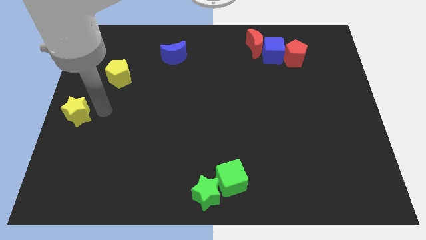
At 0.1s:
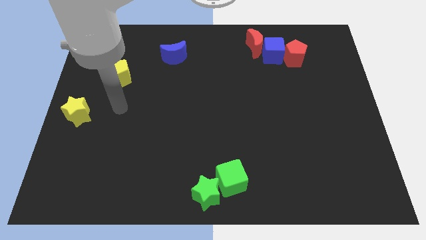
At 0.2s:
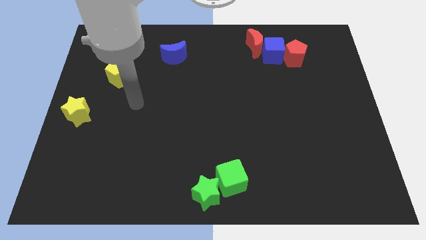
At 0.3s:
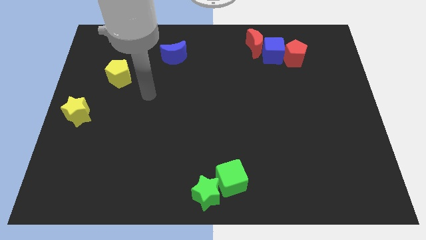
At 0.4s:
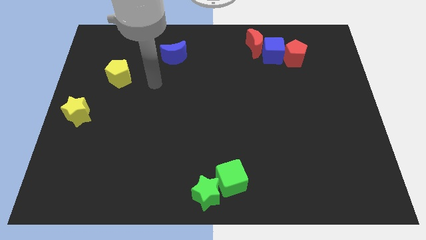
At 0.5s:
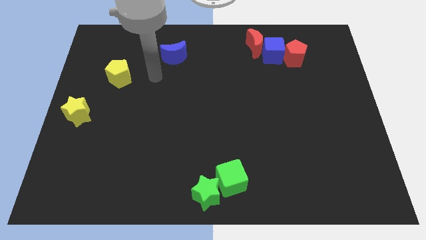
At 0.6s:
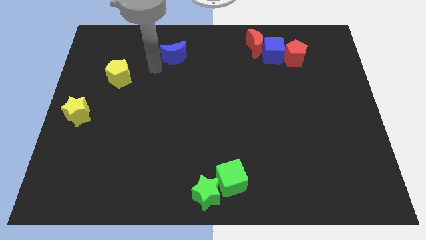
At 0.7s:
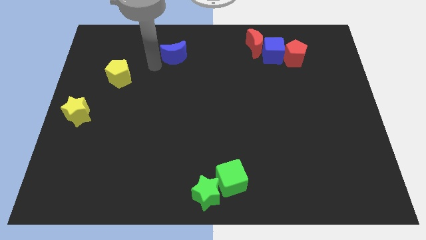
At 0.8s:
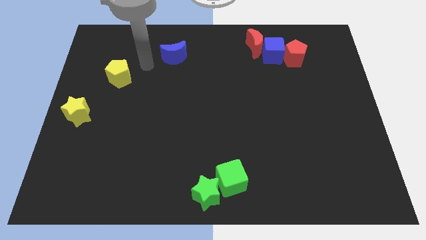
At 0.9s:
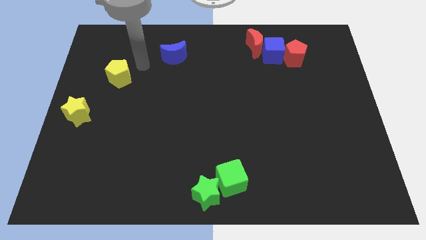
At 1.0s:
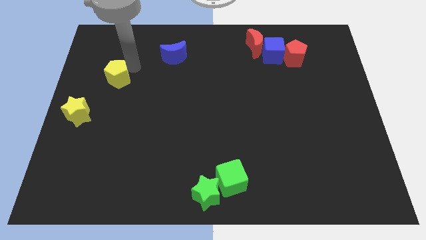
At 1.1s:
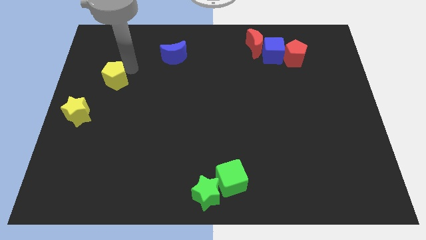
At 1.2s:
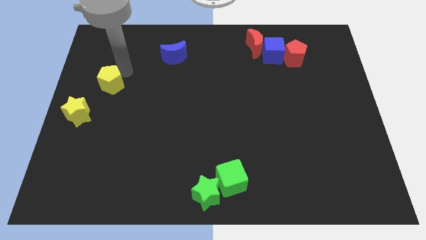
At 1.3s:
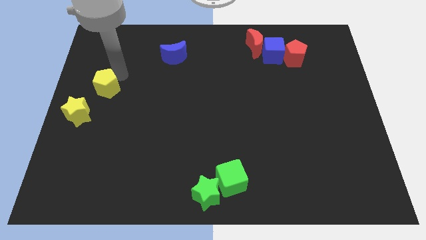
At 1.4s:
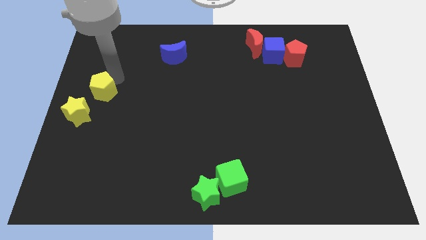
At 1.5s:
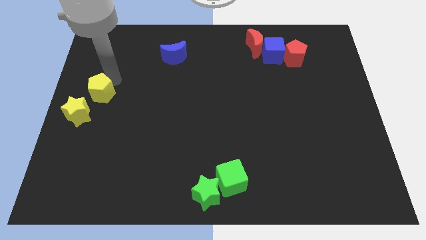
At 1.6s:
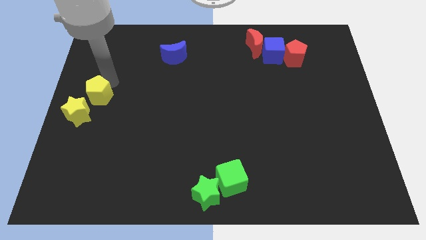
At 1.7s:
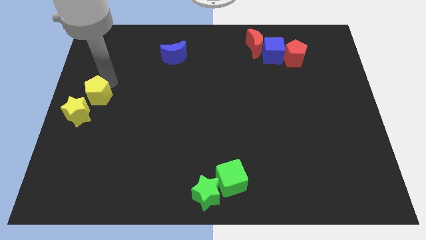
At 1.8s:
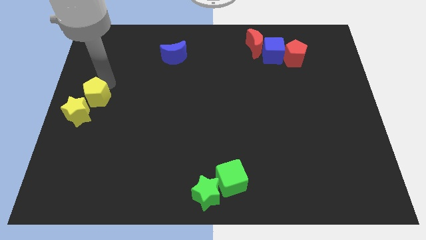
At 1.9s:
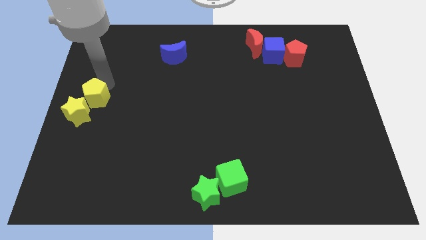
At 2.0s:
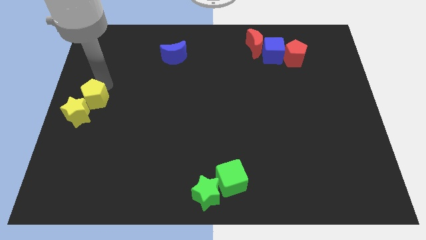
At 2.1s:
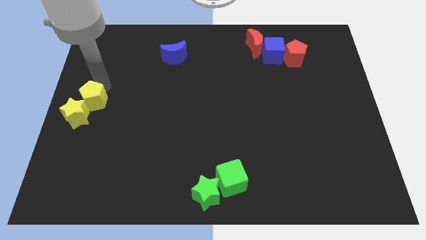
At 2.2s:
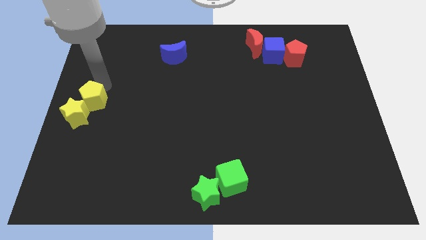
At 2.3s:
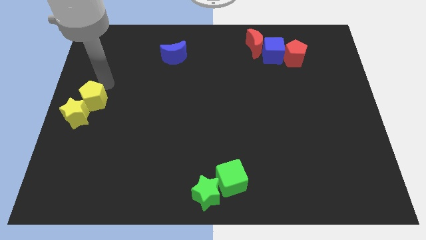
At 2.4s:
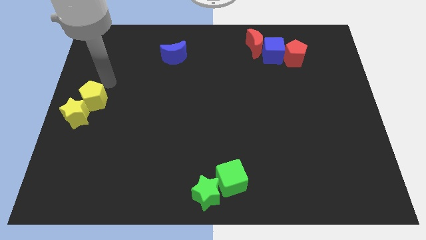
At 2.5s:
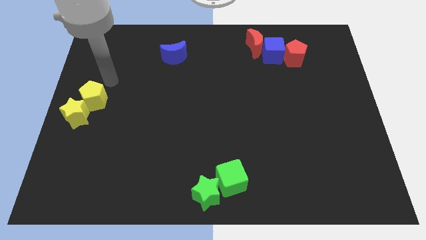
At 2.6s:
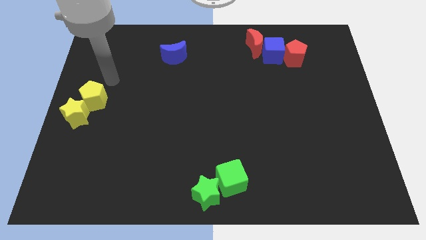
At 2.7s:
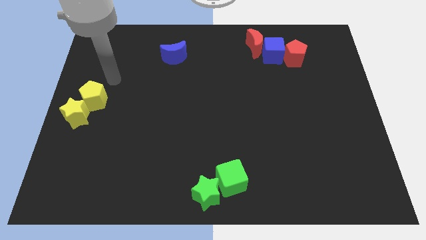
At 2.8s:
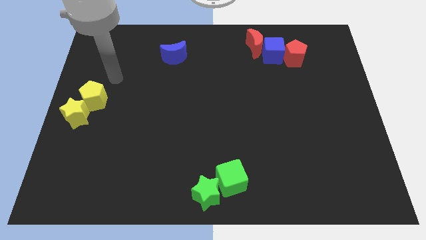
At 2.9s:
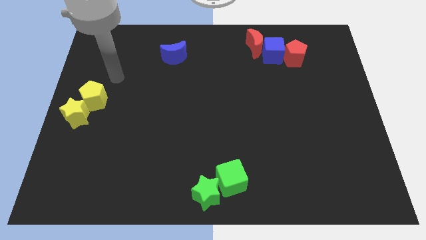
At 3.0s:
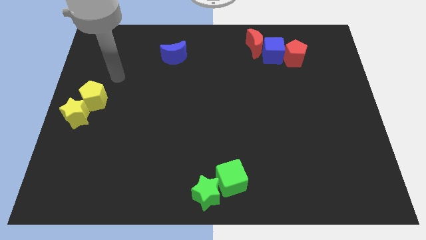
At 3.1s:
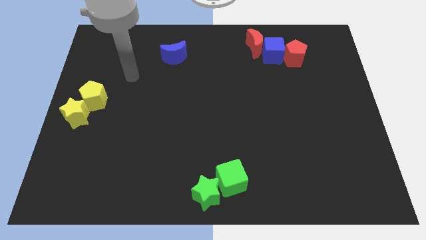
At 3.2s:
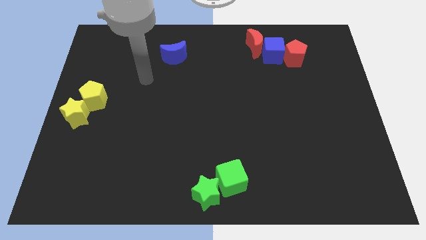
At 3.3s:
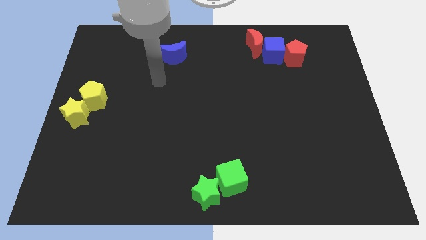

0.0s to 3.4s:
push the yellow pentagon into the yellow star which is at the left center

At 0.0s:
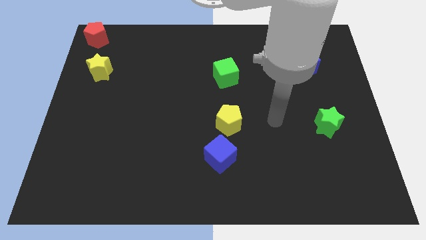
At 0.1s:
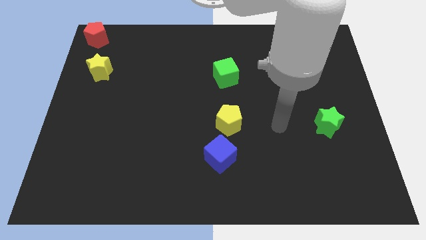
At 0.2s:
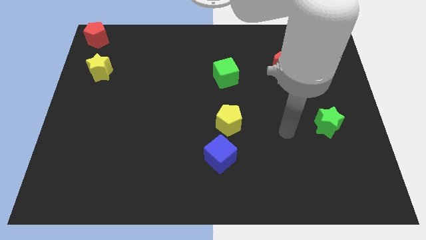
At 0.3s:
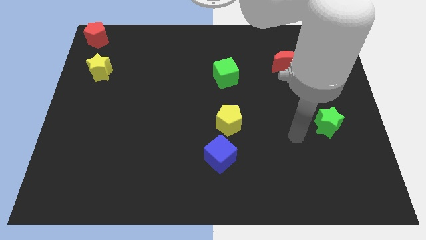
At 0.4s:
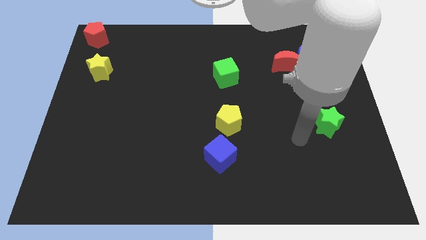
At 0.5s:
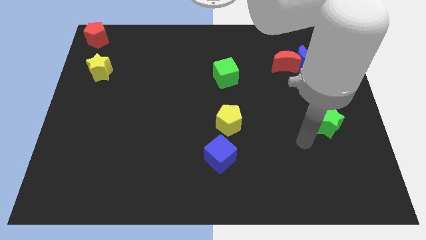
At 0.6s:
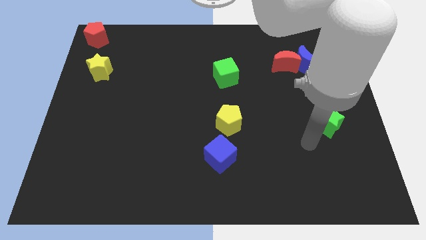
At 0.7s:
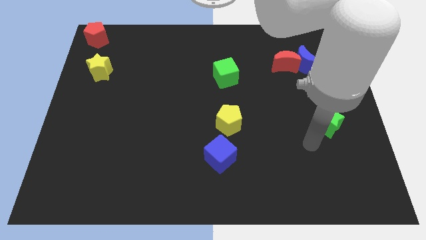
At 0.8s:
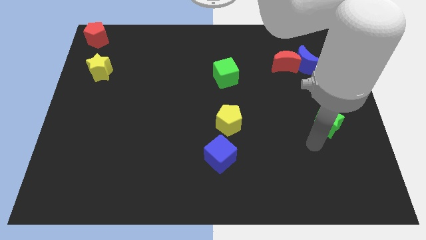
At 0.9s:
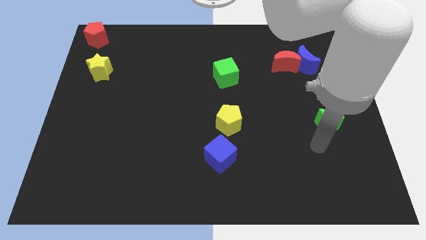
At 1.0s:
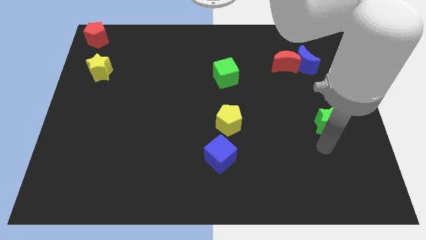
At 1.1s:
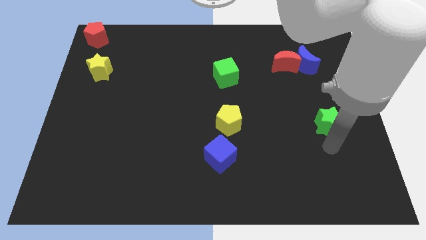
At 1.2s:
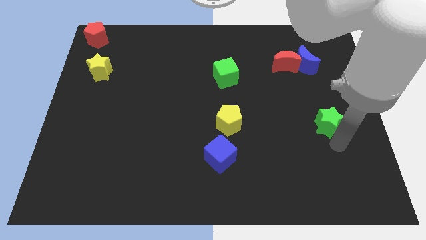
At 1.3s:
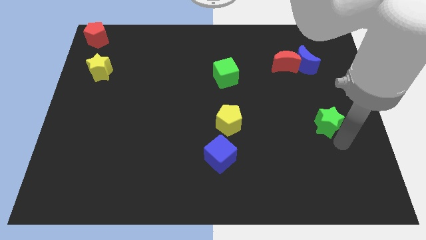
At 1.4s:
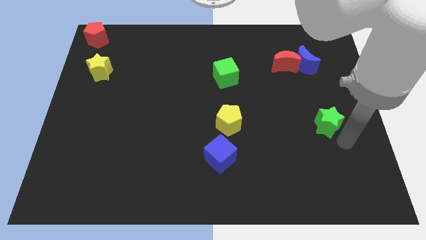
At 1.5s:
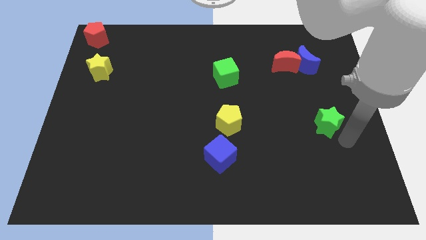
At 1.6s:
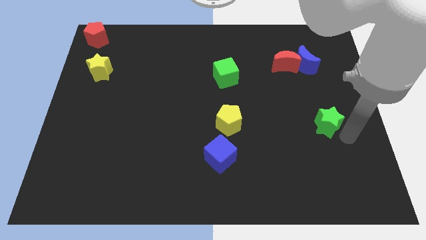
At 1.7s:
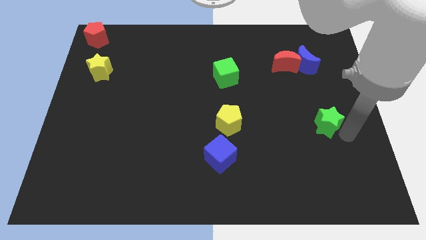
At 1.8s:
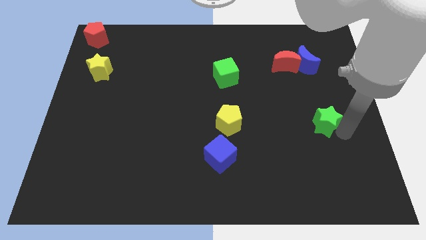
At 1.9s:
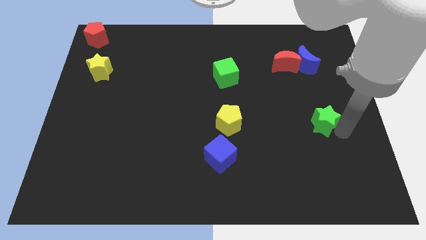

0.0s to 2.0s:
touch the bottom of green star

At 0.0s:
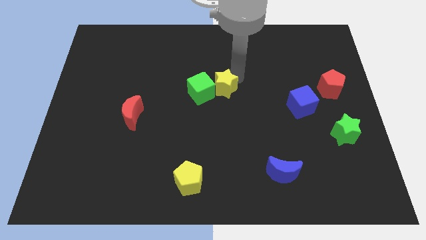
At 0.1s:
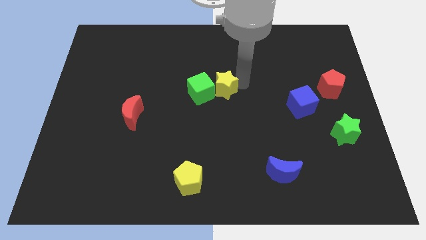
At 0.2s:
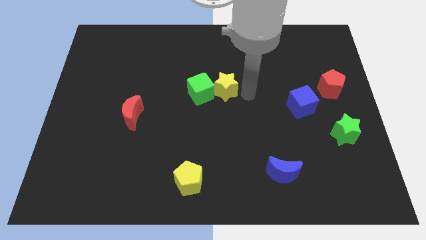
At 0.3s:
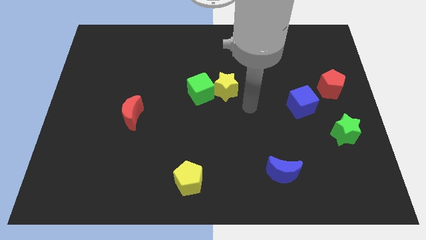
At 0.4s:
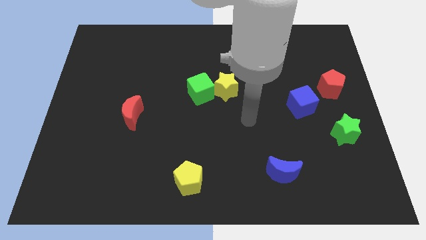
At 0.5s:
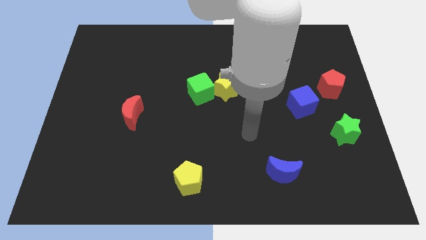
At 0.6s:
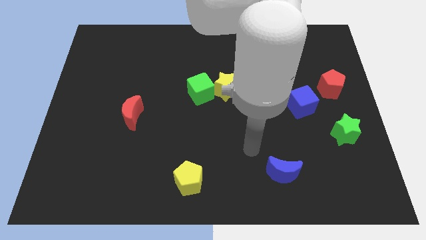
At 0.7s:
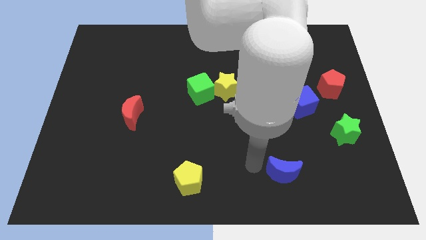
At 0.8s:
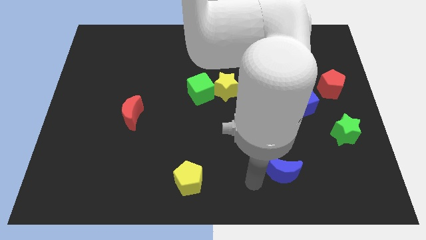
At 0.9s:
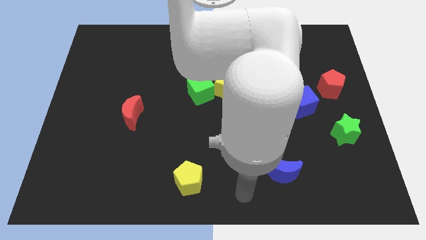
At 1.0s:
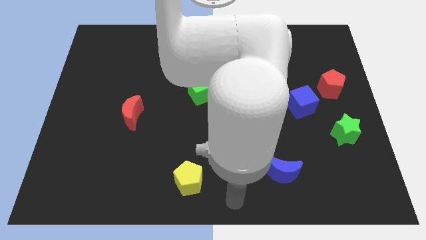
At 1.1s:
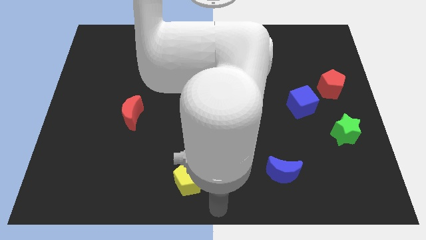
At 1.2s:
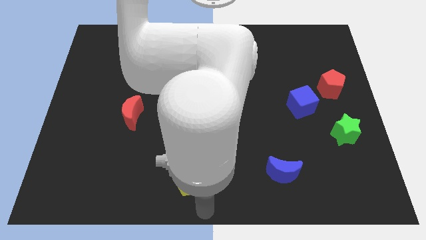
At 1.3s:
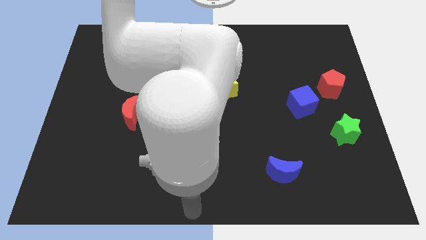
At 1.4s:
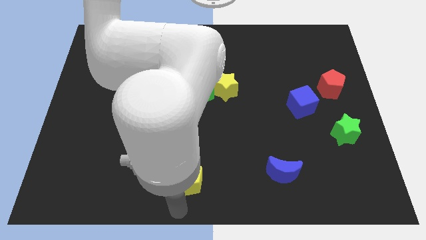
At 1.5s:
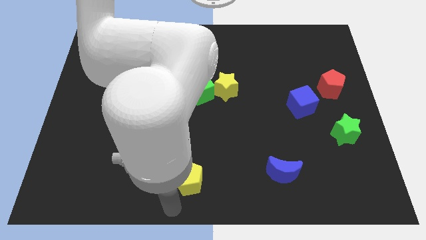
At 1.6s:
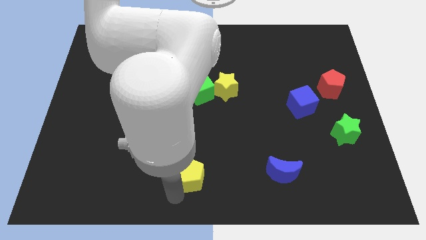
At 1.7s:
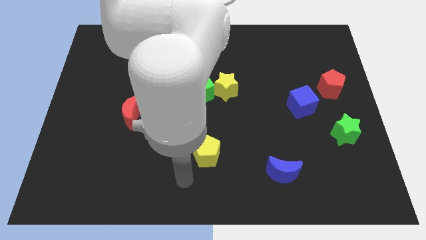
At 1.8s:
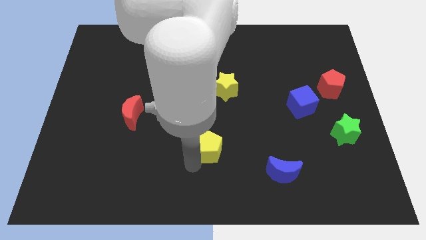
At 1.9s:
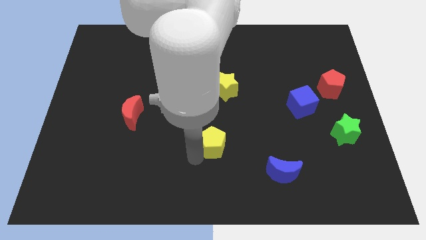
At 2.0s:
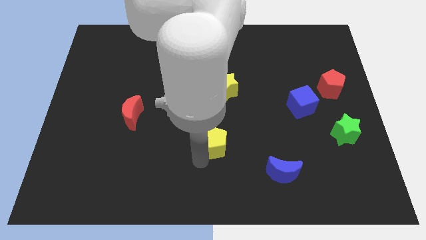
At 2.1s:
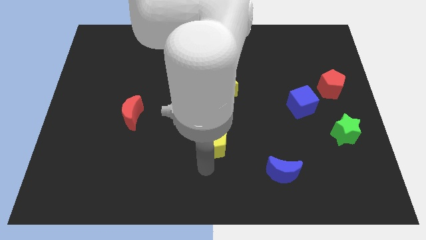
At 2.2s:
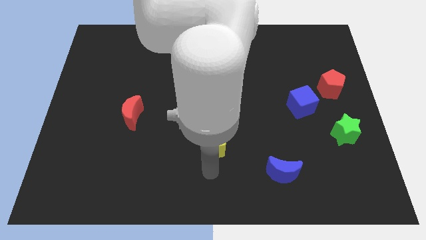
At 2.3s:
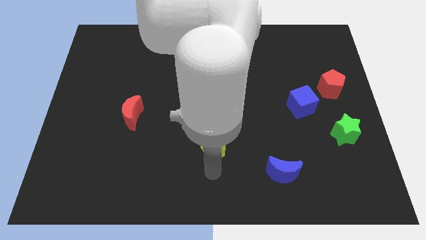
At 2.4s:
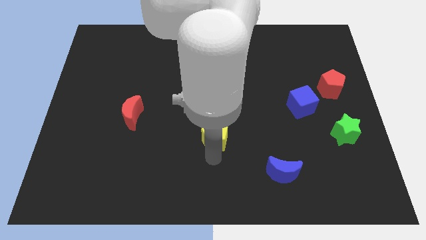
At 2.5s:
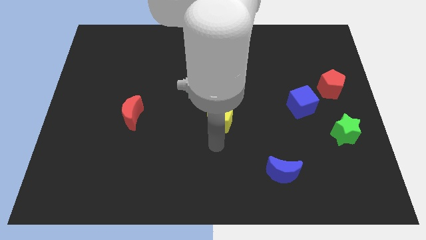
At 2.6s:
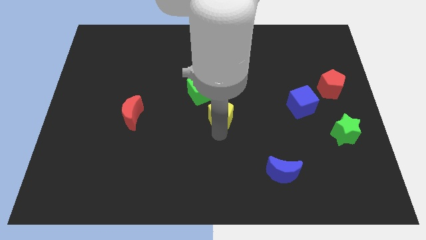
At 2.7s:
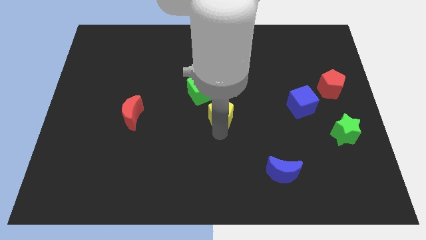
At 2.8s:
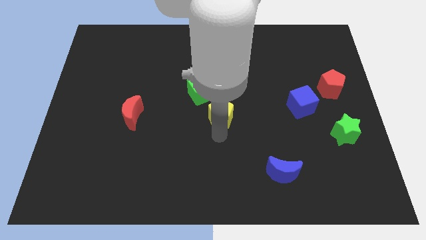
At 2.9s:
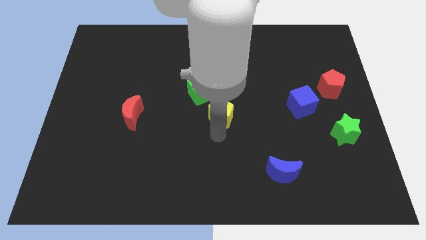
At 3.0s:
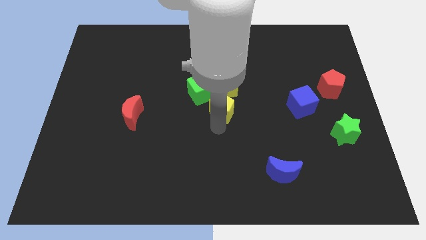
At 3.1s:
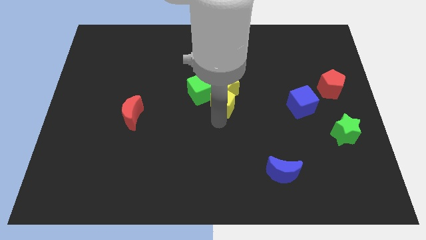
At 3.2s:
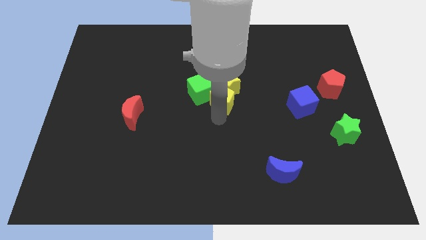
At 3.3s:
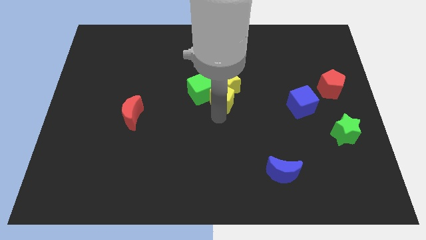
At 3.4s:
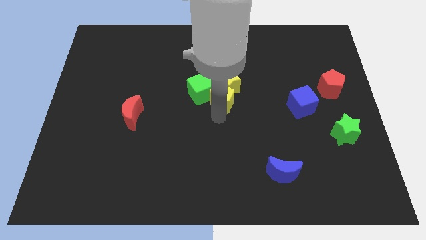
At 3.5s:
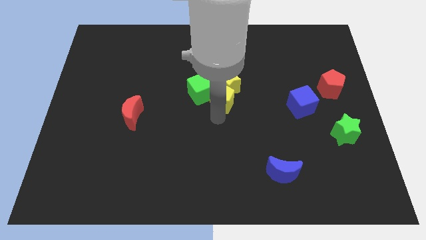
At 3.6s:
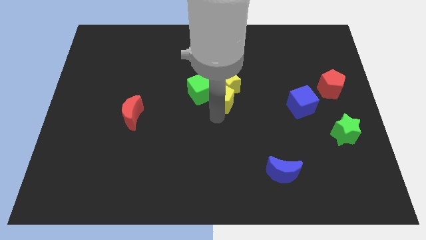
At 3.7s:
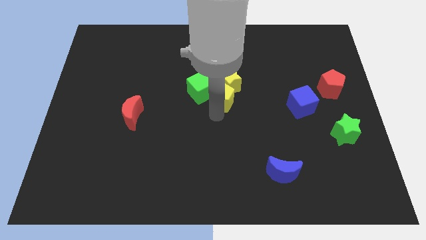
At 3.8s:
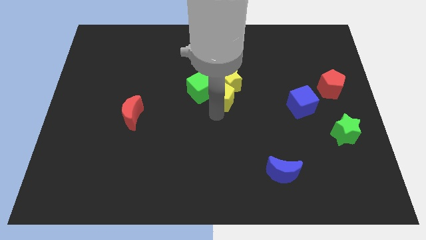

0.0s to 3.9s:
place the yellow pentagon at the center of the board
